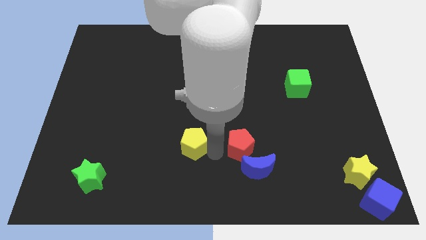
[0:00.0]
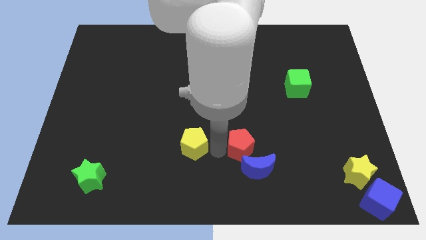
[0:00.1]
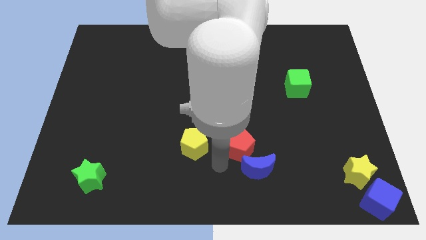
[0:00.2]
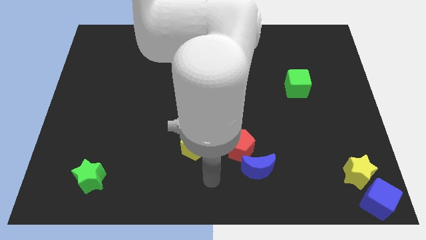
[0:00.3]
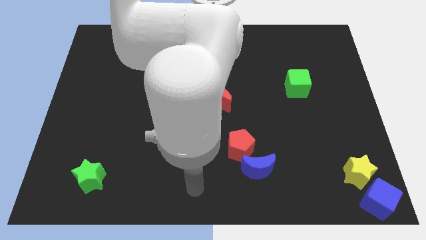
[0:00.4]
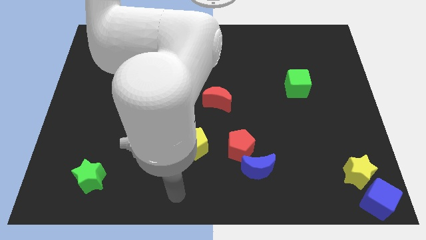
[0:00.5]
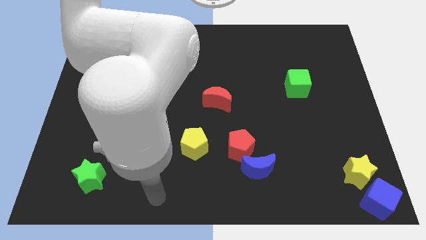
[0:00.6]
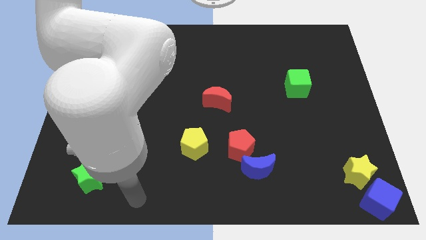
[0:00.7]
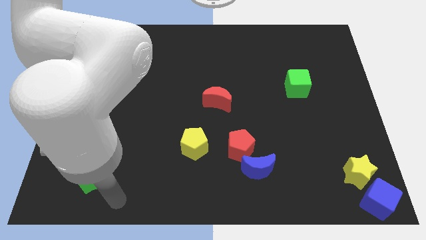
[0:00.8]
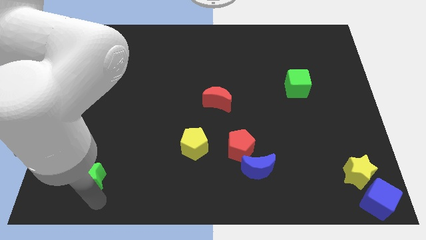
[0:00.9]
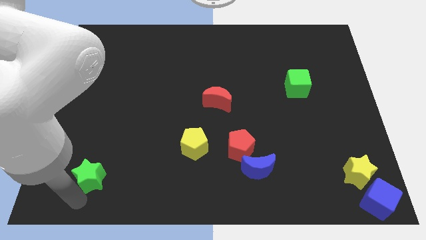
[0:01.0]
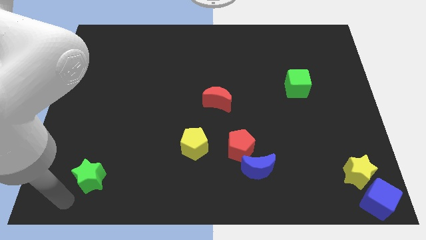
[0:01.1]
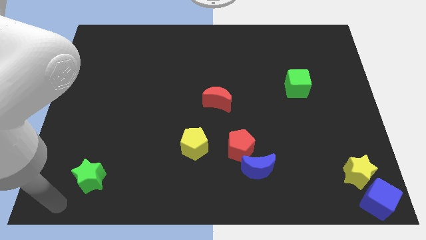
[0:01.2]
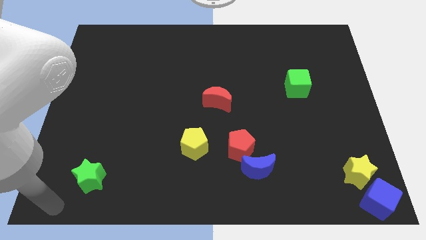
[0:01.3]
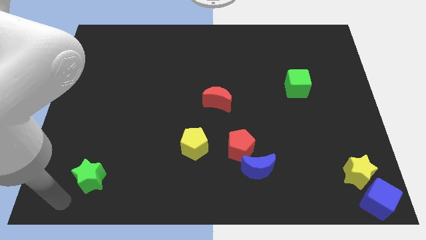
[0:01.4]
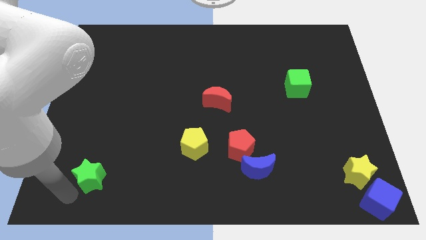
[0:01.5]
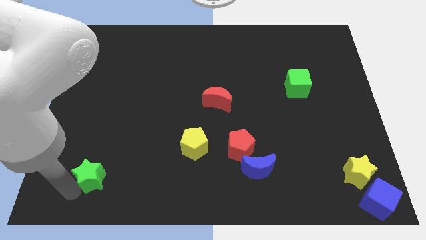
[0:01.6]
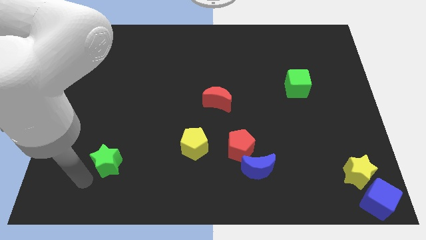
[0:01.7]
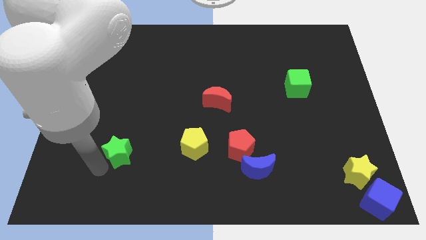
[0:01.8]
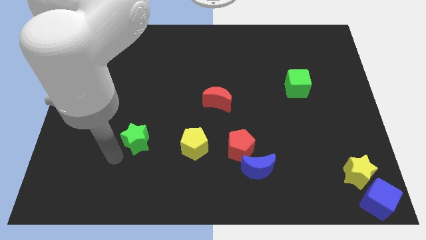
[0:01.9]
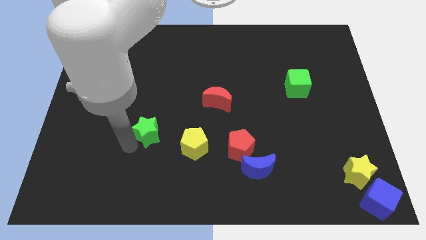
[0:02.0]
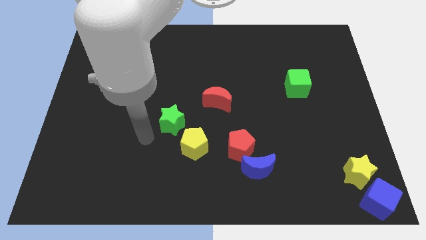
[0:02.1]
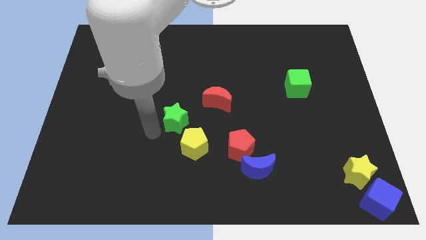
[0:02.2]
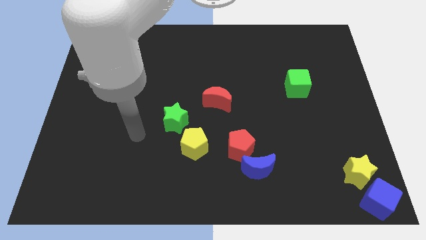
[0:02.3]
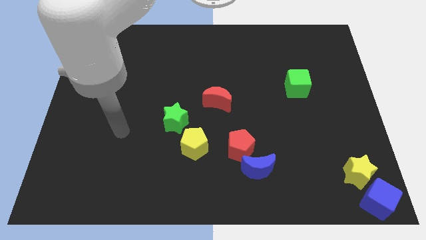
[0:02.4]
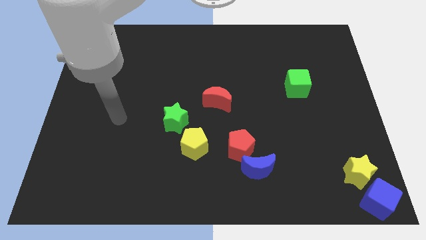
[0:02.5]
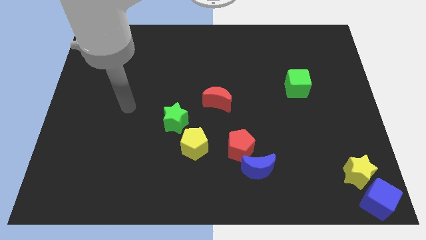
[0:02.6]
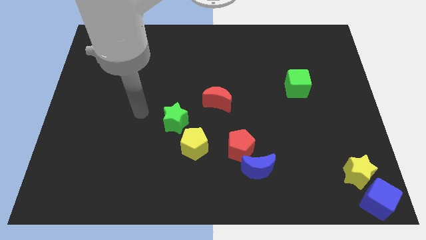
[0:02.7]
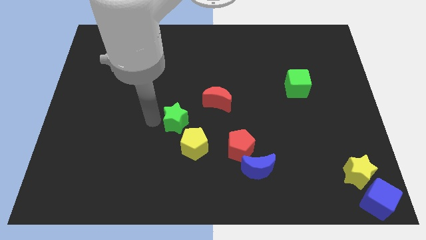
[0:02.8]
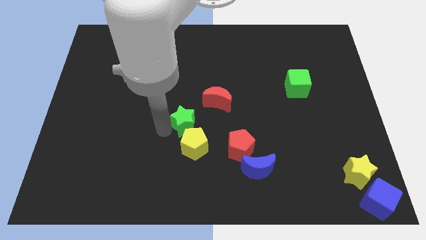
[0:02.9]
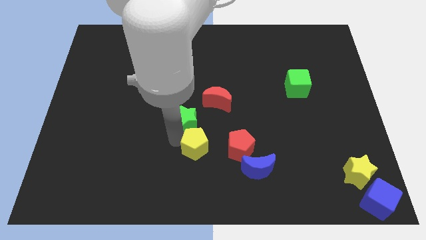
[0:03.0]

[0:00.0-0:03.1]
place the green star close to the top of the yellow pentagon

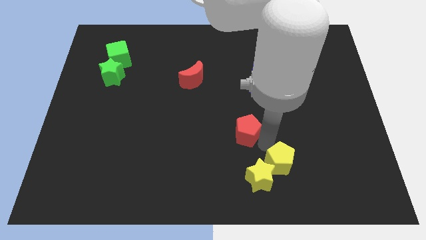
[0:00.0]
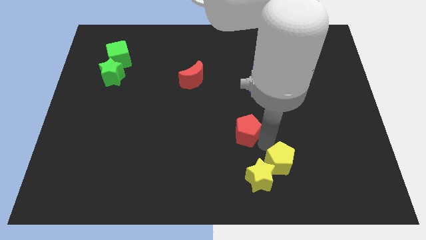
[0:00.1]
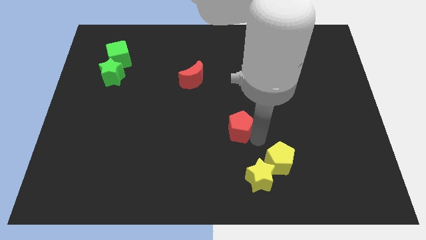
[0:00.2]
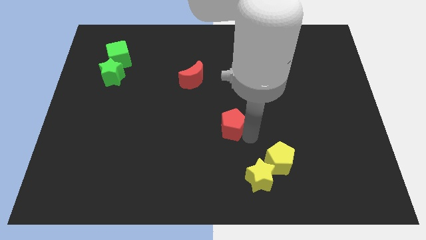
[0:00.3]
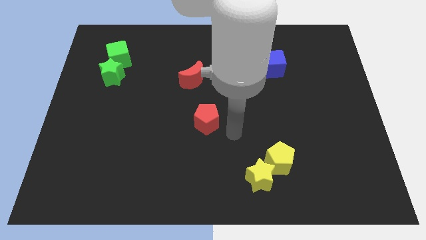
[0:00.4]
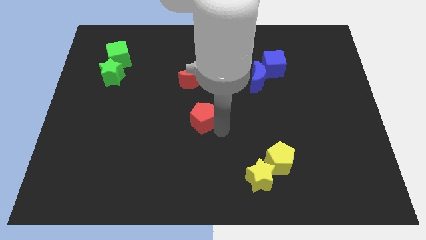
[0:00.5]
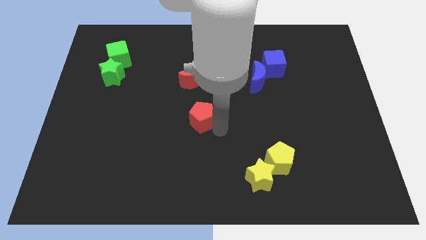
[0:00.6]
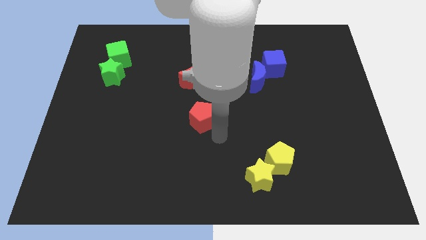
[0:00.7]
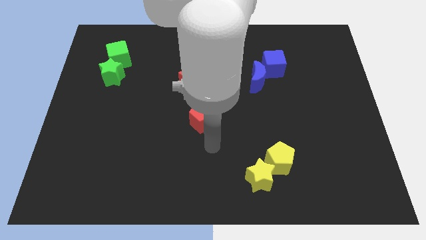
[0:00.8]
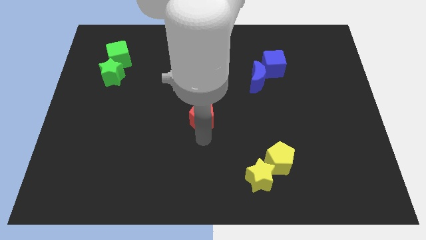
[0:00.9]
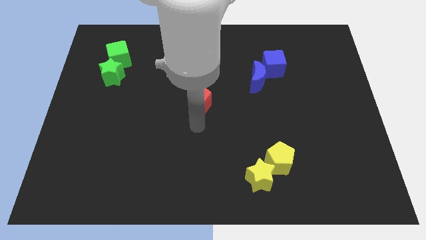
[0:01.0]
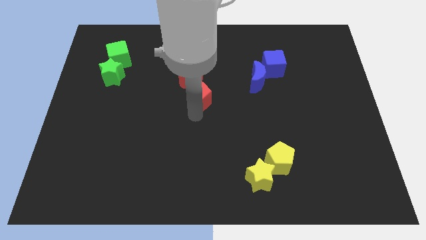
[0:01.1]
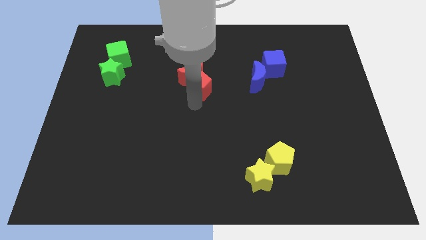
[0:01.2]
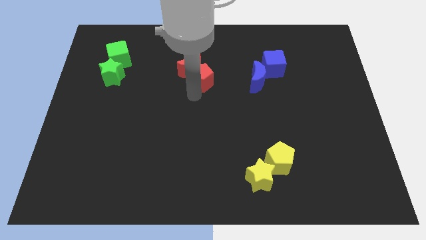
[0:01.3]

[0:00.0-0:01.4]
slide the red pentagon to the bottom right side of the red crescent

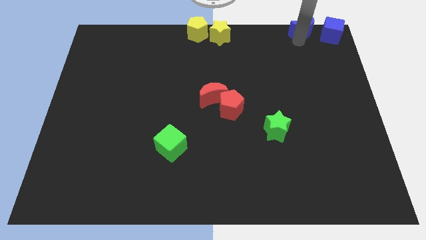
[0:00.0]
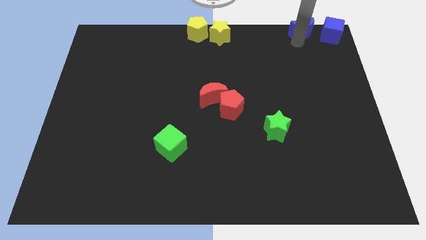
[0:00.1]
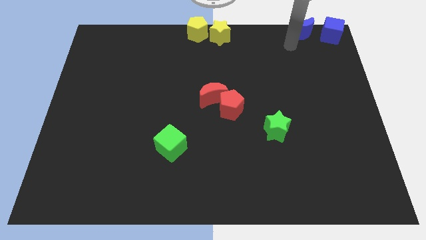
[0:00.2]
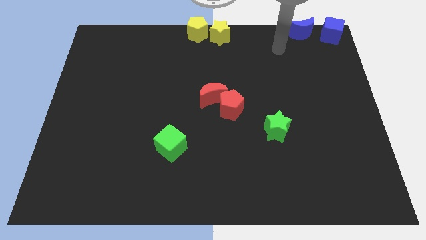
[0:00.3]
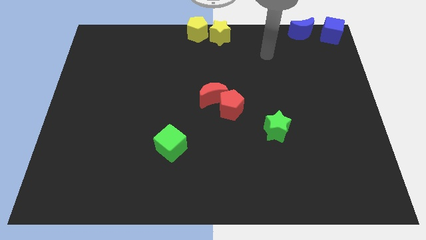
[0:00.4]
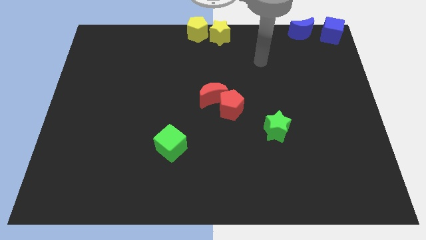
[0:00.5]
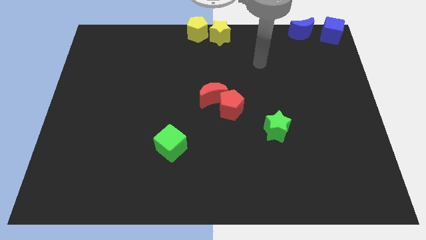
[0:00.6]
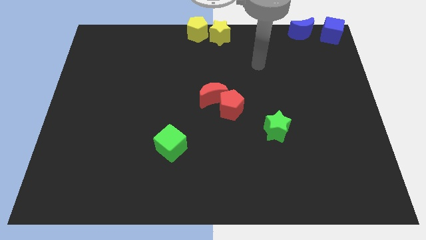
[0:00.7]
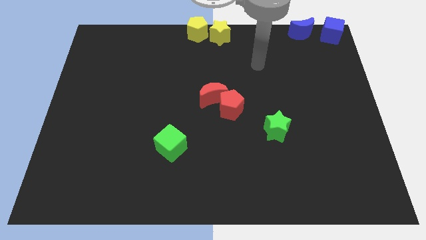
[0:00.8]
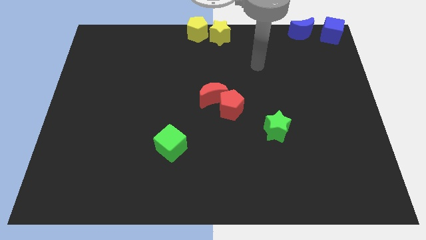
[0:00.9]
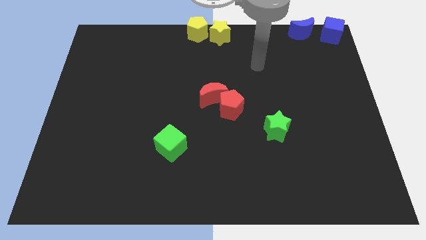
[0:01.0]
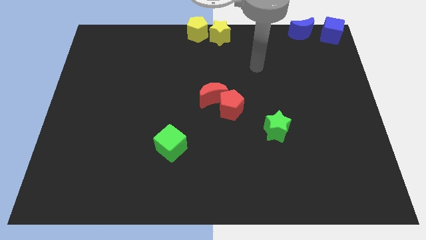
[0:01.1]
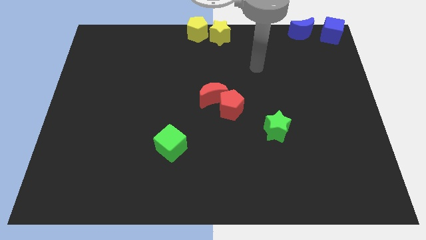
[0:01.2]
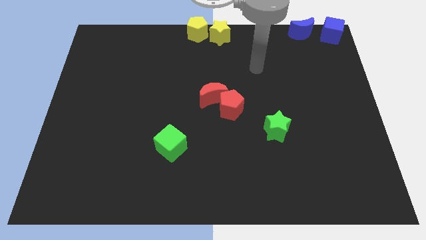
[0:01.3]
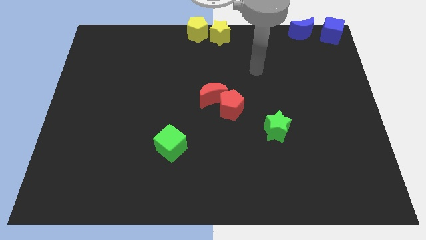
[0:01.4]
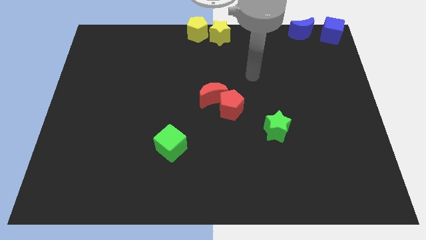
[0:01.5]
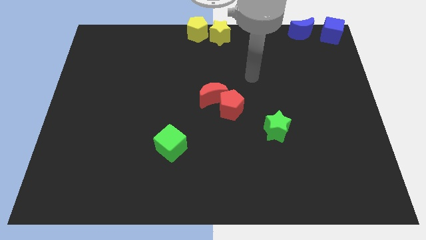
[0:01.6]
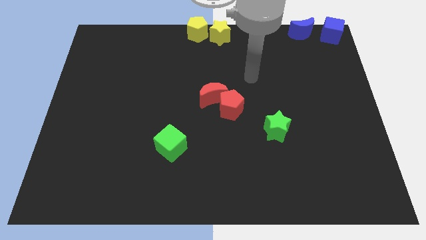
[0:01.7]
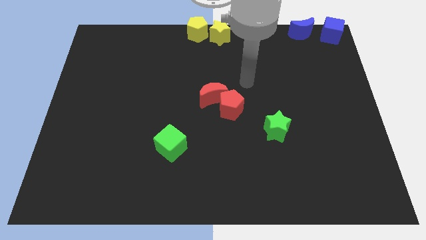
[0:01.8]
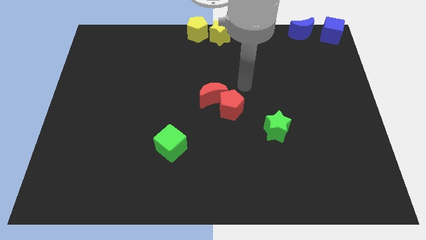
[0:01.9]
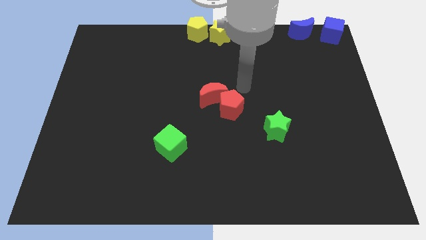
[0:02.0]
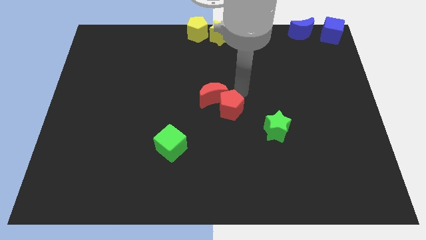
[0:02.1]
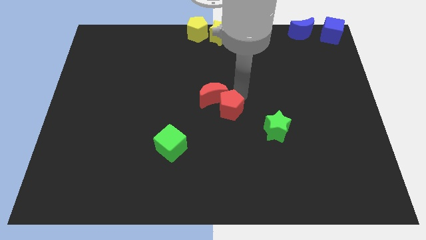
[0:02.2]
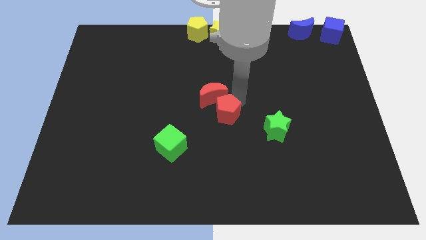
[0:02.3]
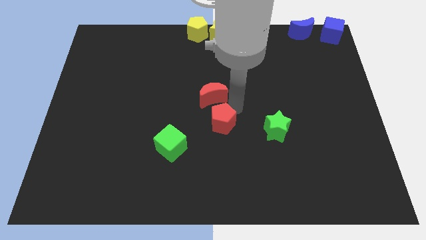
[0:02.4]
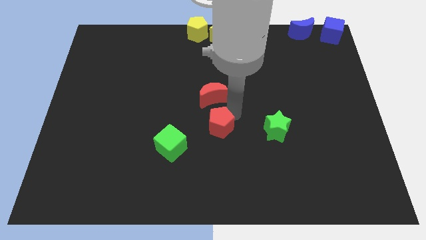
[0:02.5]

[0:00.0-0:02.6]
push red pentagon slightly down

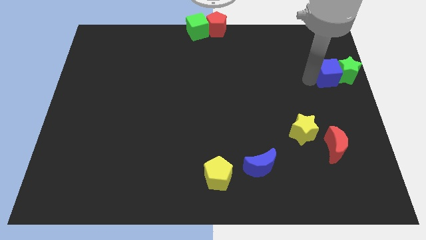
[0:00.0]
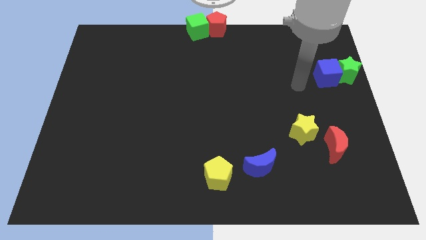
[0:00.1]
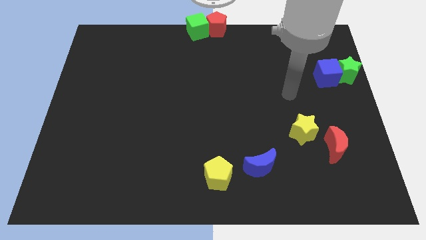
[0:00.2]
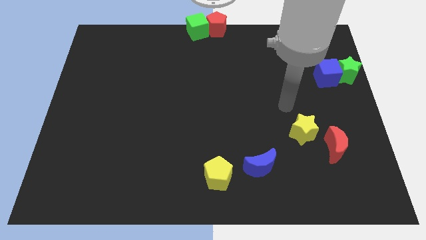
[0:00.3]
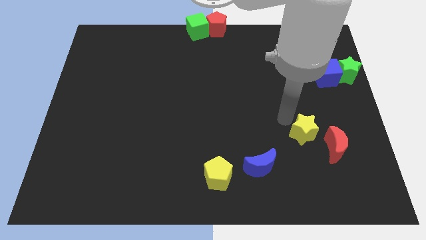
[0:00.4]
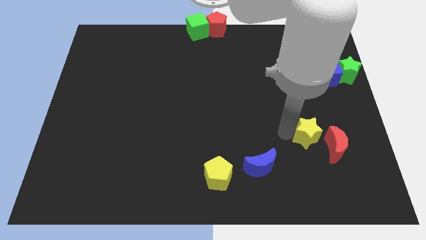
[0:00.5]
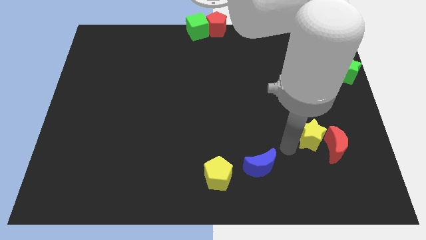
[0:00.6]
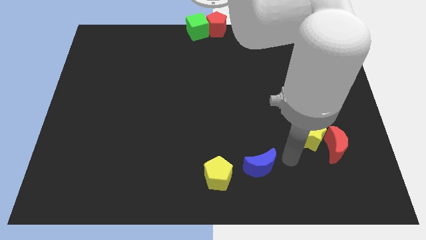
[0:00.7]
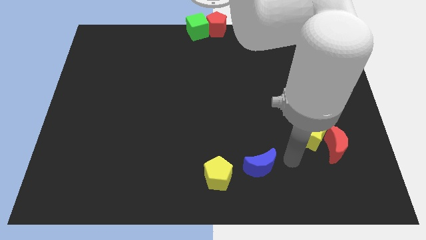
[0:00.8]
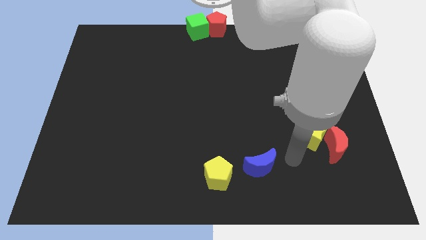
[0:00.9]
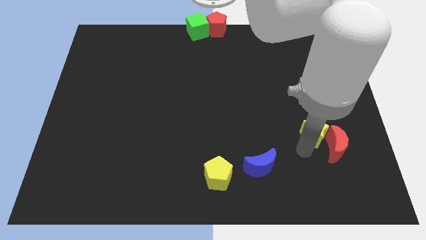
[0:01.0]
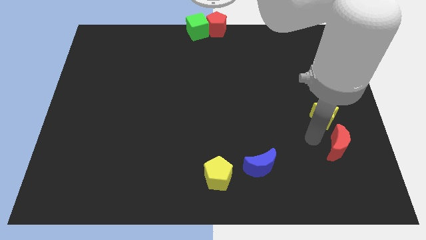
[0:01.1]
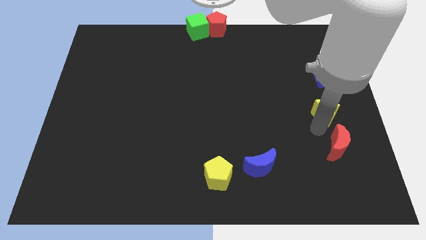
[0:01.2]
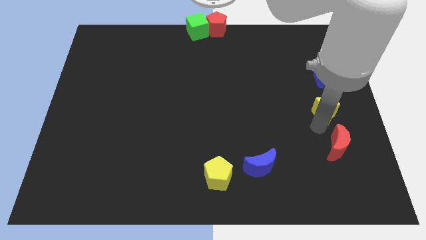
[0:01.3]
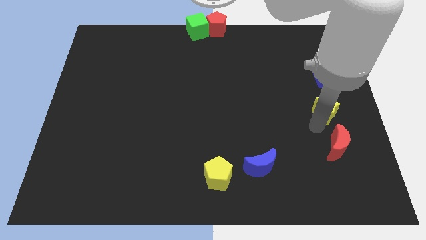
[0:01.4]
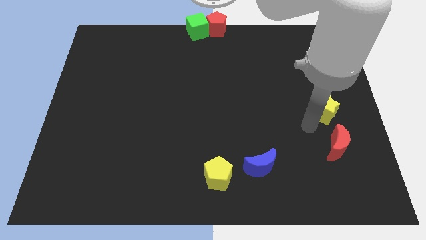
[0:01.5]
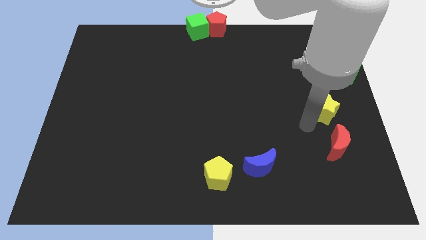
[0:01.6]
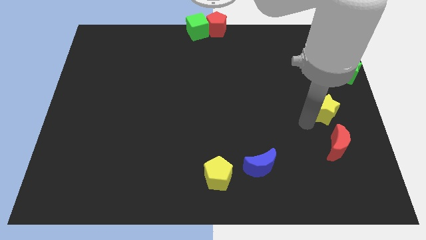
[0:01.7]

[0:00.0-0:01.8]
move the yellow star to the bottom of the blue cube
